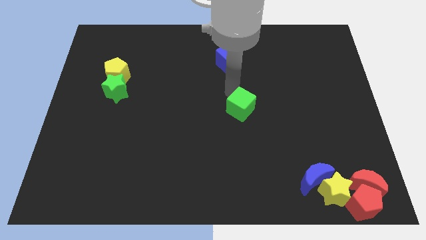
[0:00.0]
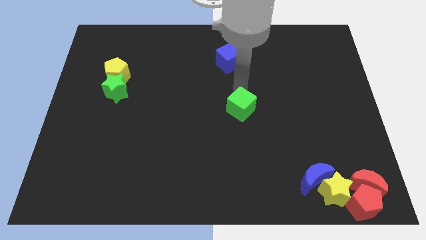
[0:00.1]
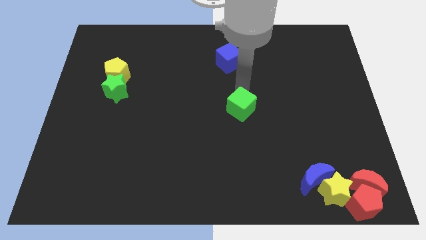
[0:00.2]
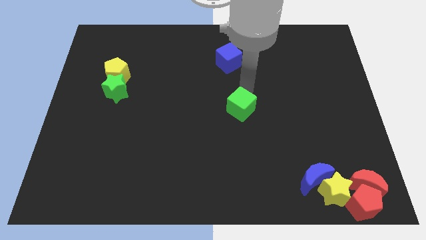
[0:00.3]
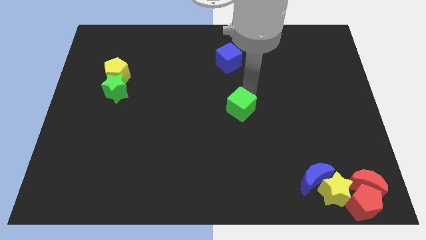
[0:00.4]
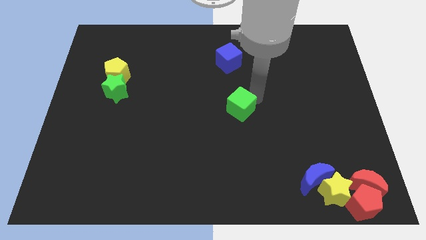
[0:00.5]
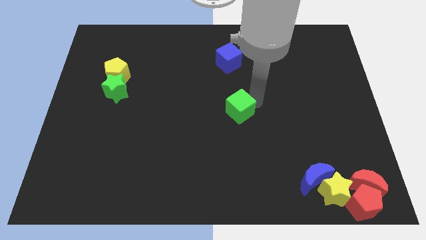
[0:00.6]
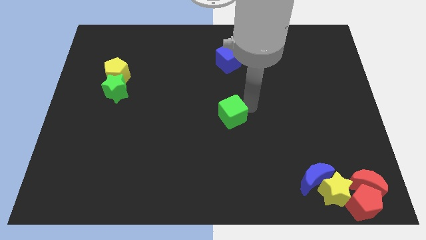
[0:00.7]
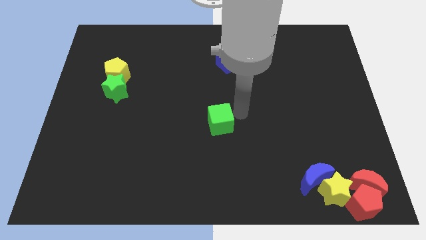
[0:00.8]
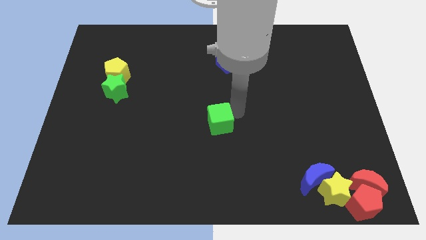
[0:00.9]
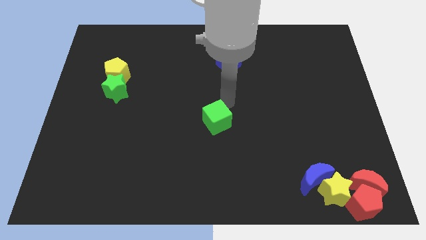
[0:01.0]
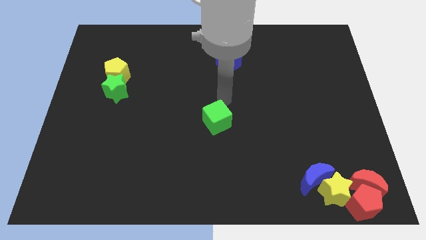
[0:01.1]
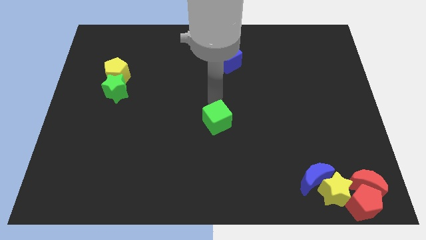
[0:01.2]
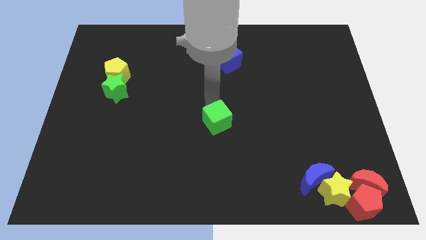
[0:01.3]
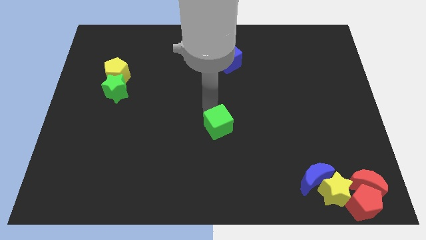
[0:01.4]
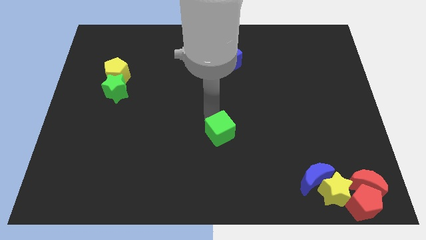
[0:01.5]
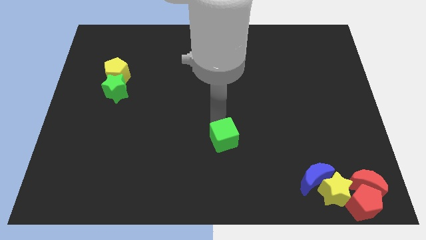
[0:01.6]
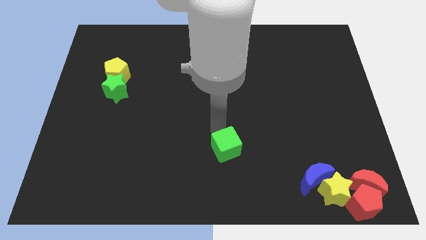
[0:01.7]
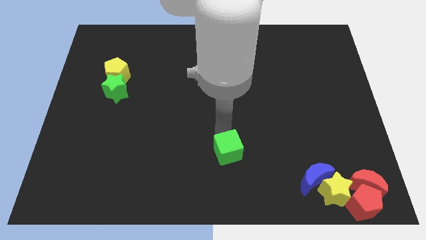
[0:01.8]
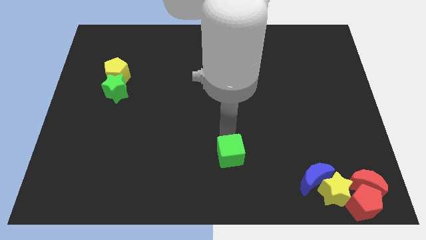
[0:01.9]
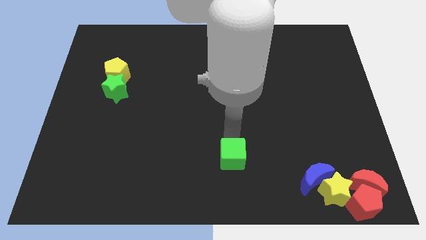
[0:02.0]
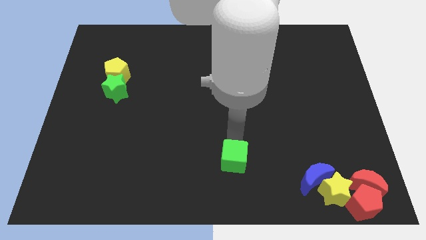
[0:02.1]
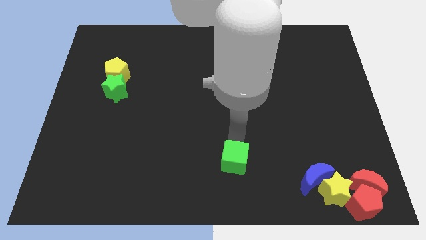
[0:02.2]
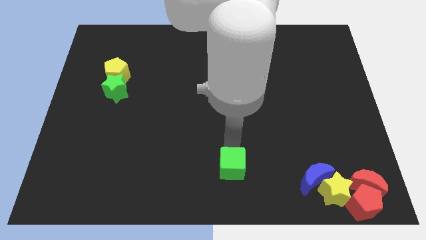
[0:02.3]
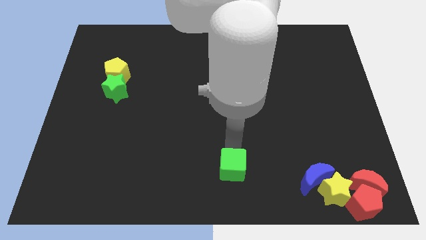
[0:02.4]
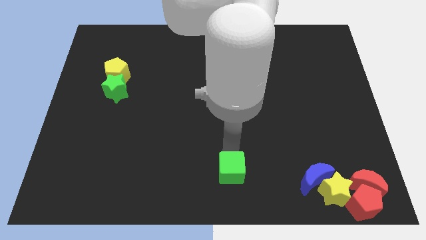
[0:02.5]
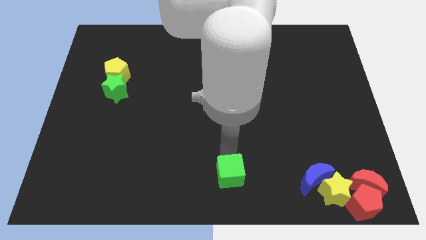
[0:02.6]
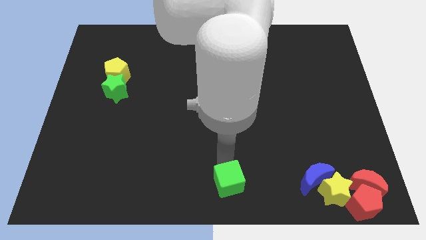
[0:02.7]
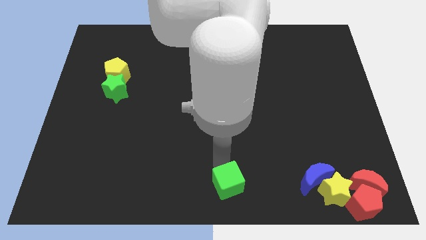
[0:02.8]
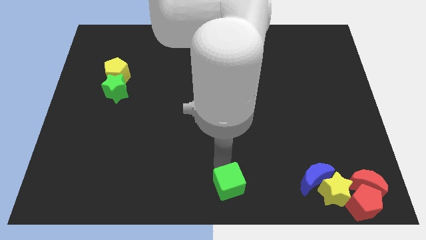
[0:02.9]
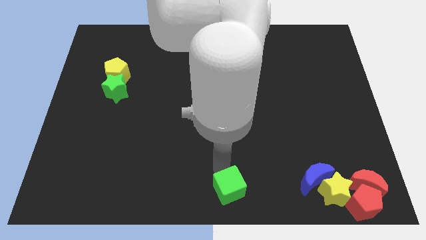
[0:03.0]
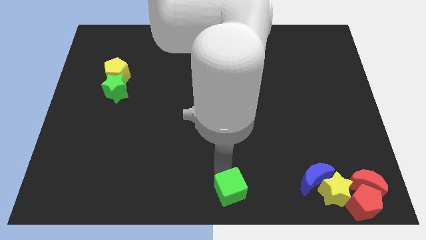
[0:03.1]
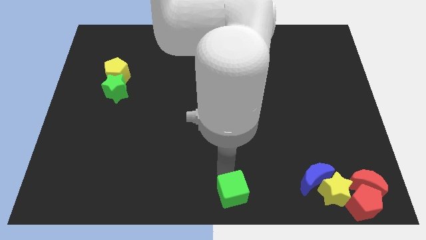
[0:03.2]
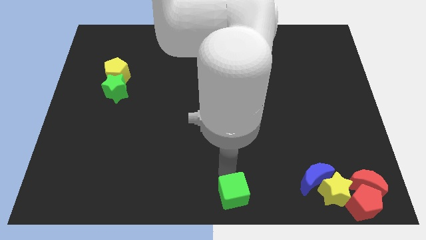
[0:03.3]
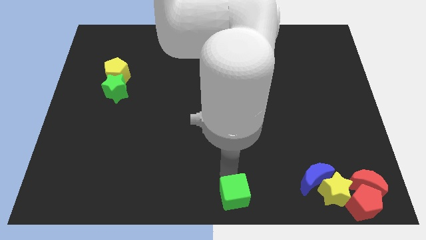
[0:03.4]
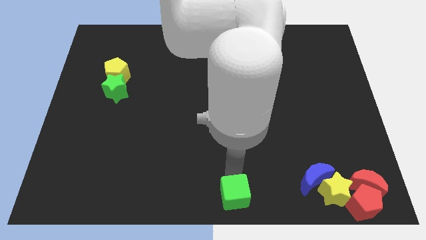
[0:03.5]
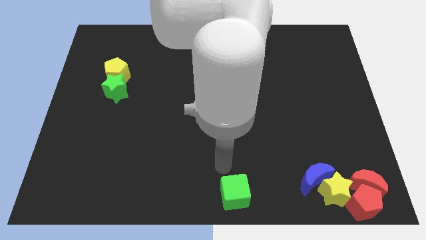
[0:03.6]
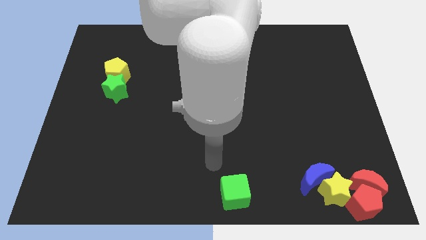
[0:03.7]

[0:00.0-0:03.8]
put the green cube at the bottom center of the board

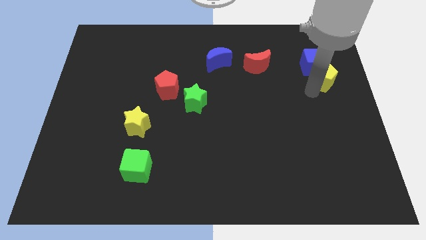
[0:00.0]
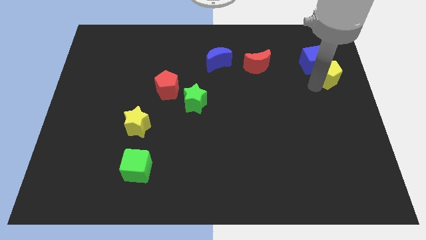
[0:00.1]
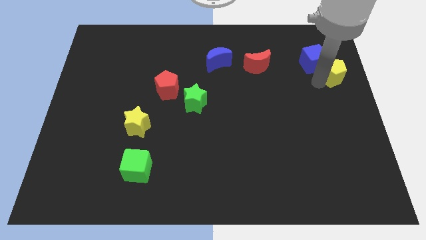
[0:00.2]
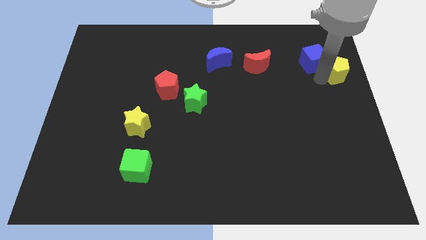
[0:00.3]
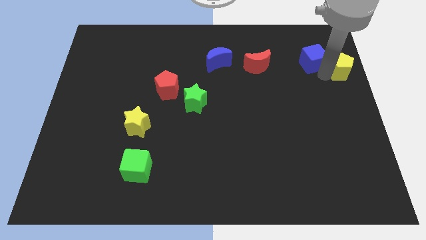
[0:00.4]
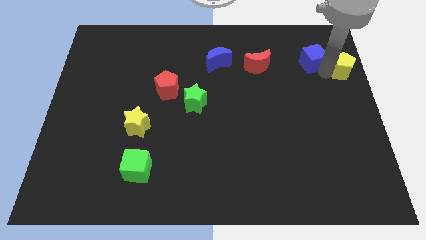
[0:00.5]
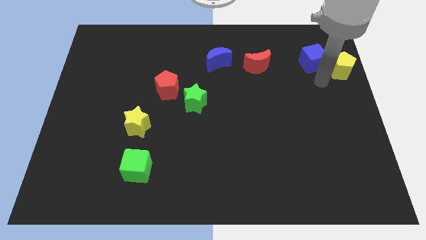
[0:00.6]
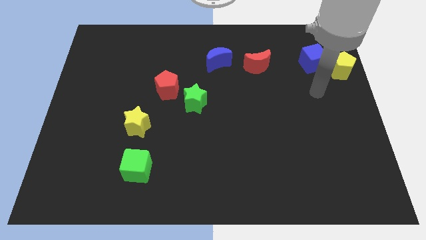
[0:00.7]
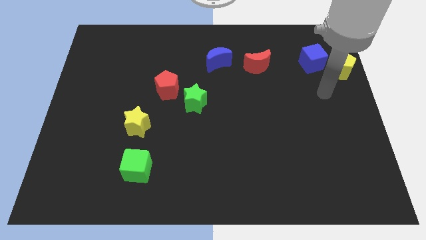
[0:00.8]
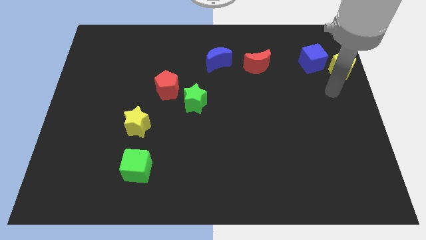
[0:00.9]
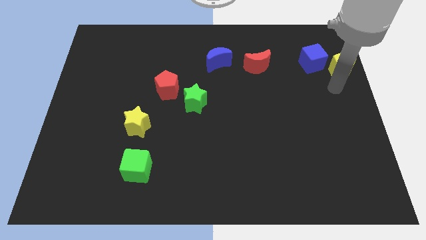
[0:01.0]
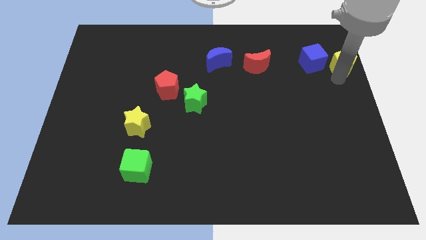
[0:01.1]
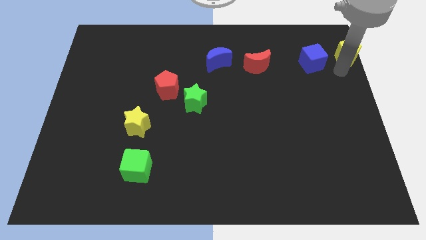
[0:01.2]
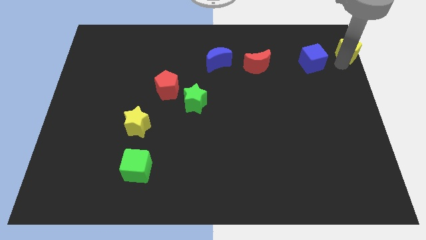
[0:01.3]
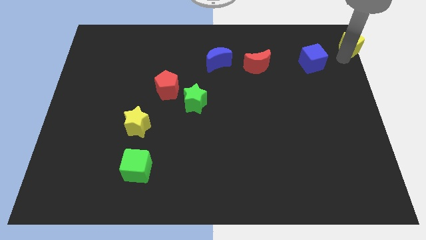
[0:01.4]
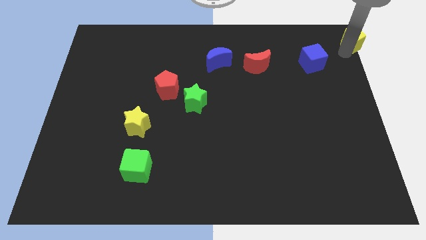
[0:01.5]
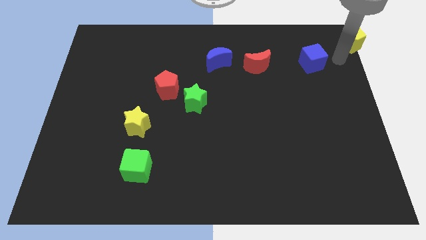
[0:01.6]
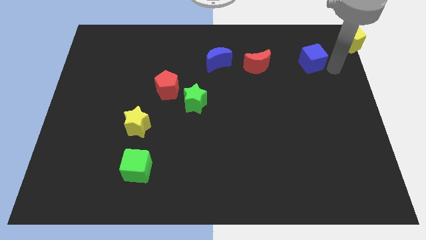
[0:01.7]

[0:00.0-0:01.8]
move the yellow pentagon to the top right corner

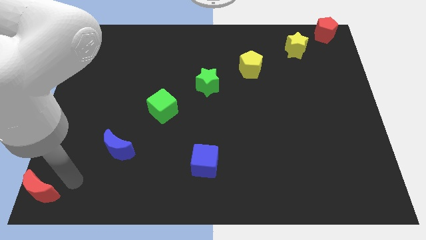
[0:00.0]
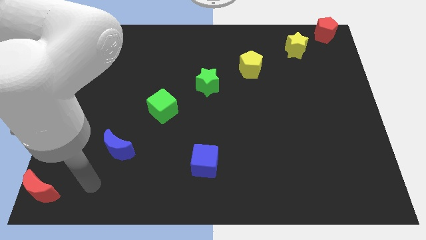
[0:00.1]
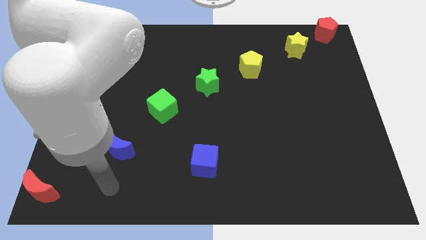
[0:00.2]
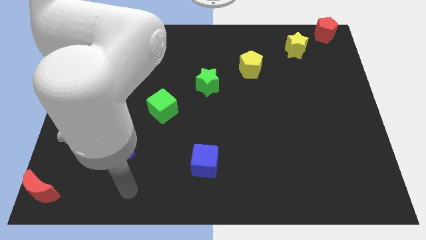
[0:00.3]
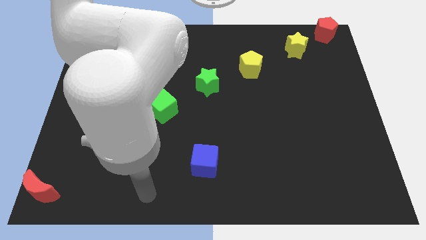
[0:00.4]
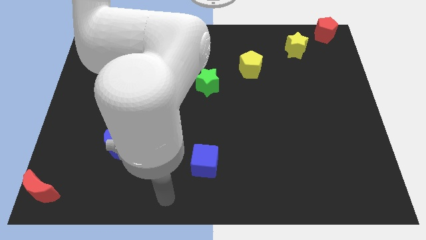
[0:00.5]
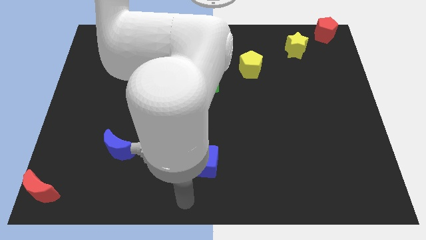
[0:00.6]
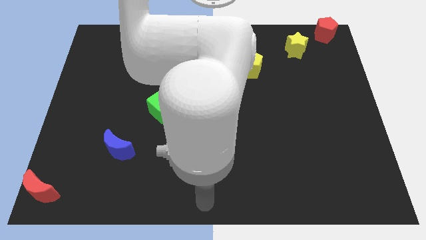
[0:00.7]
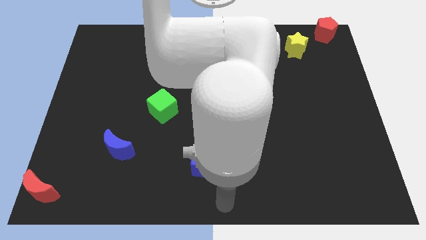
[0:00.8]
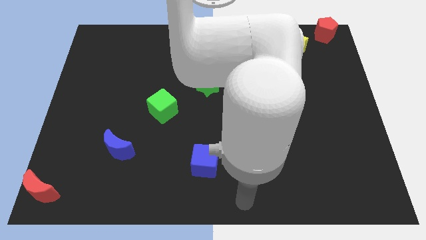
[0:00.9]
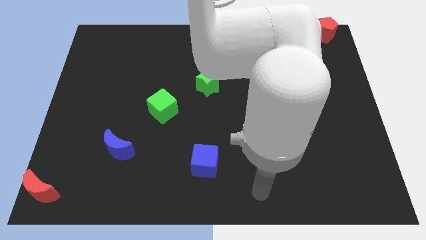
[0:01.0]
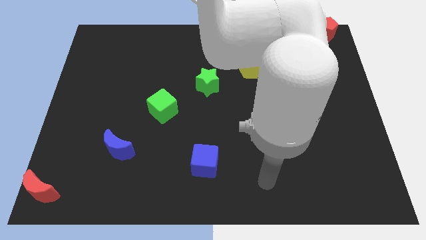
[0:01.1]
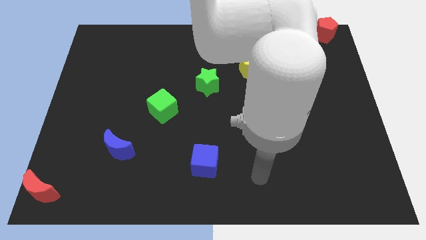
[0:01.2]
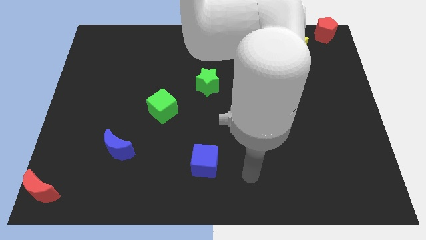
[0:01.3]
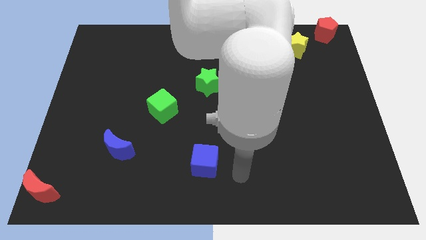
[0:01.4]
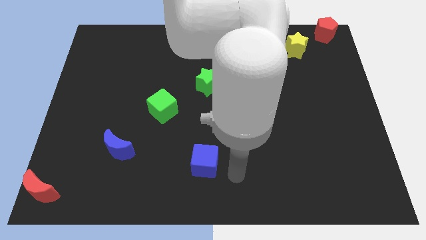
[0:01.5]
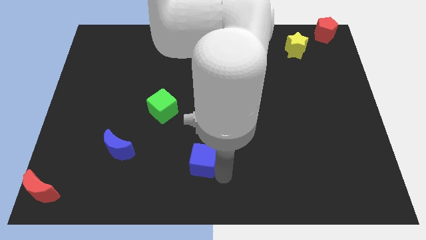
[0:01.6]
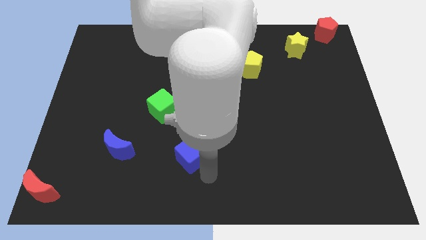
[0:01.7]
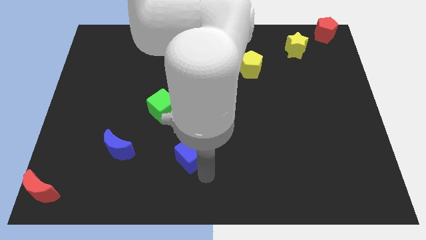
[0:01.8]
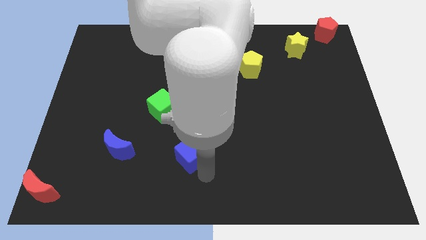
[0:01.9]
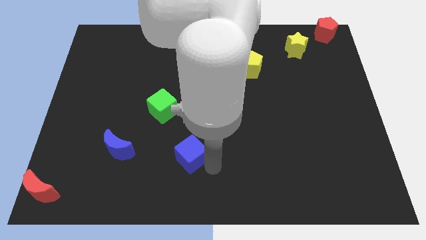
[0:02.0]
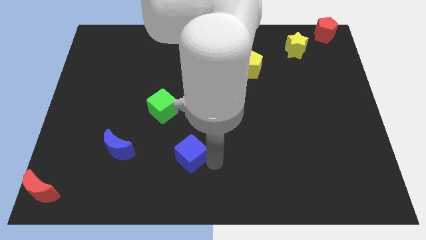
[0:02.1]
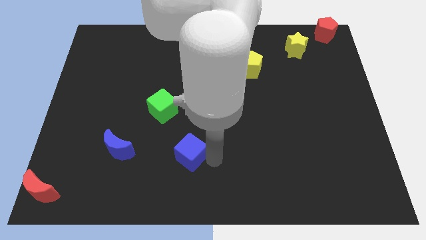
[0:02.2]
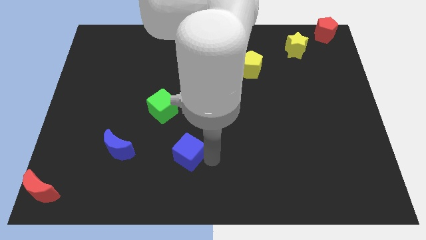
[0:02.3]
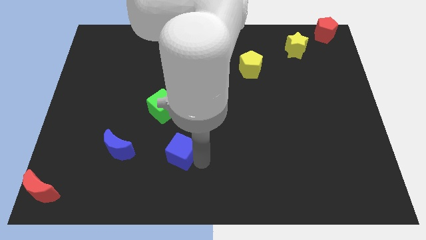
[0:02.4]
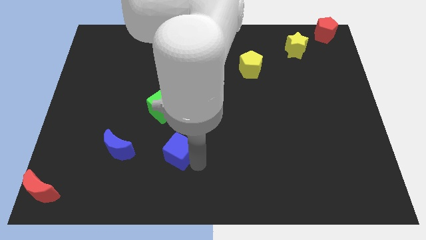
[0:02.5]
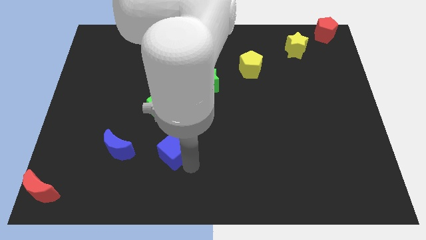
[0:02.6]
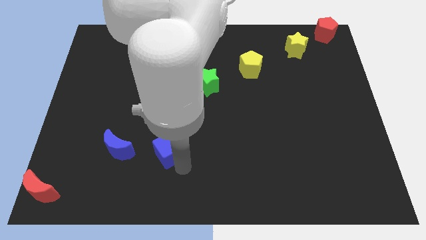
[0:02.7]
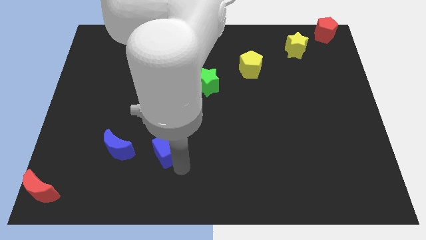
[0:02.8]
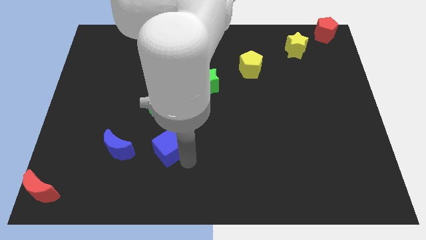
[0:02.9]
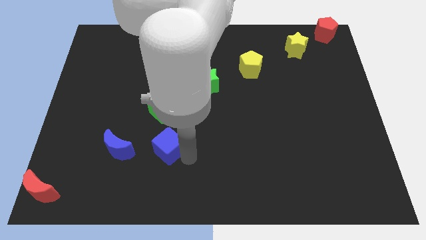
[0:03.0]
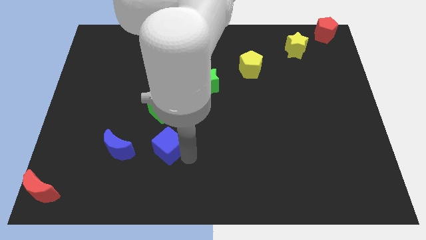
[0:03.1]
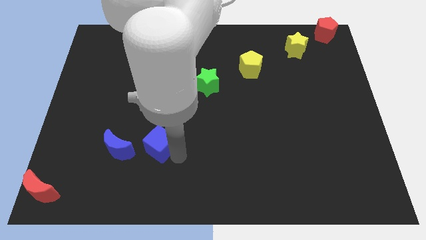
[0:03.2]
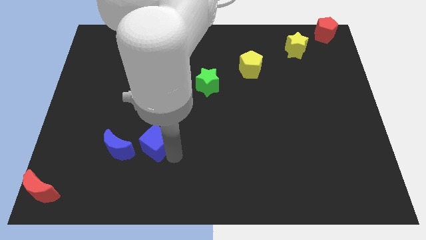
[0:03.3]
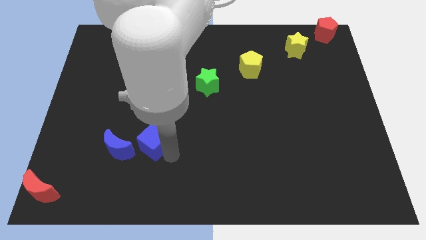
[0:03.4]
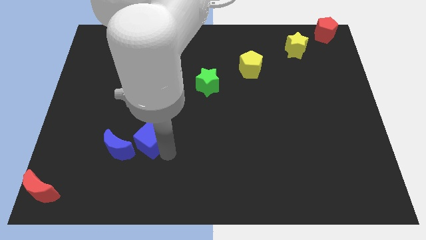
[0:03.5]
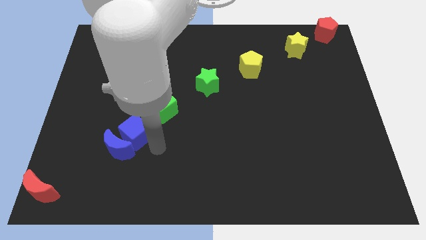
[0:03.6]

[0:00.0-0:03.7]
slide the blue cube to the top right side of the blue crescent
